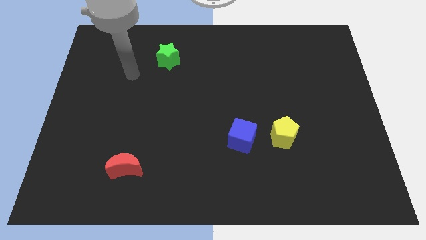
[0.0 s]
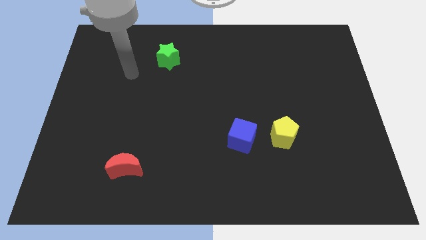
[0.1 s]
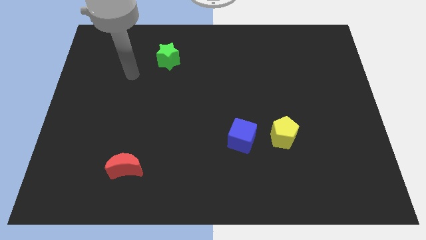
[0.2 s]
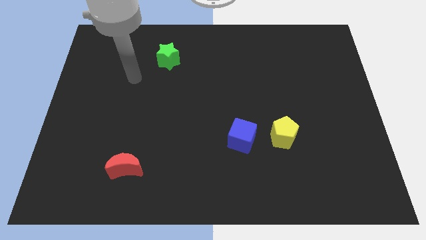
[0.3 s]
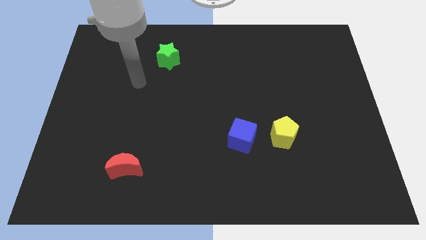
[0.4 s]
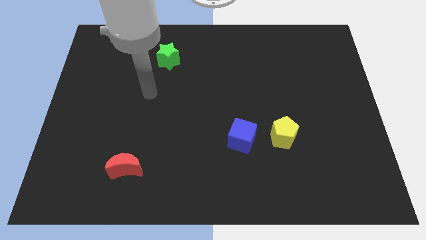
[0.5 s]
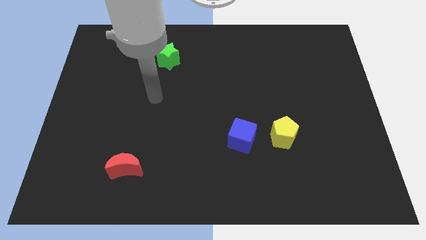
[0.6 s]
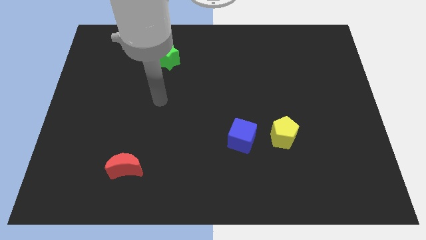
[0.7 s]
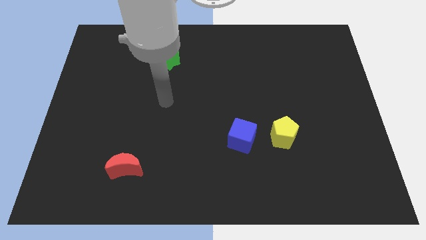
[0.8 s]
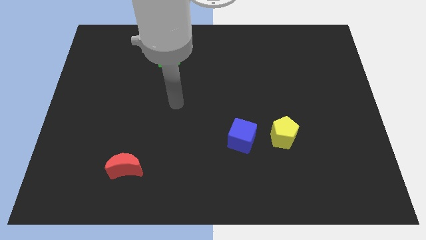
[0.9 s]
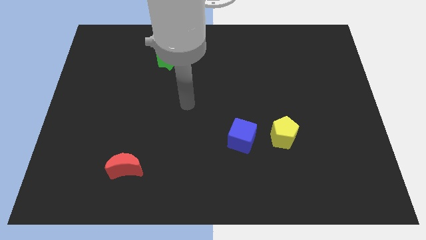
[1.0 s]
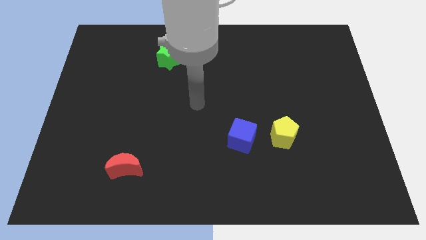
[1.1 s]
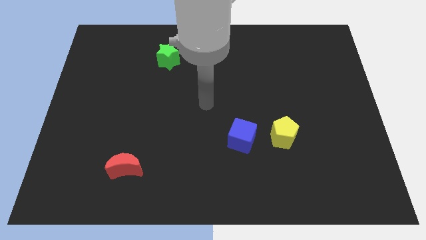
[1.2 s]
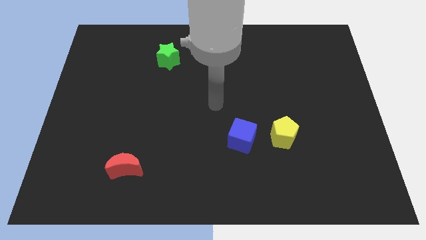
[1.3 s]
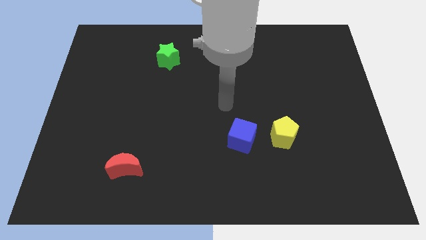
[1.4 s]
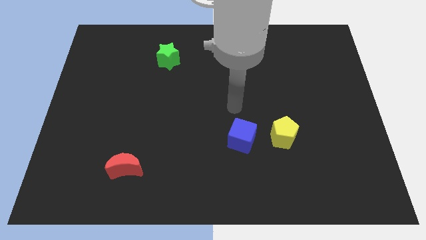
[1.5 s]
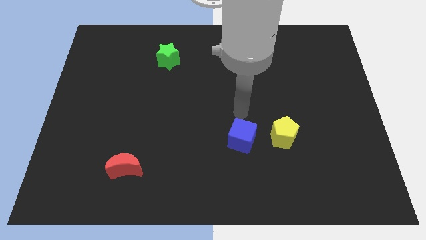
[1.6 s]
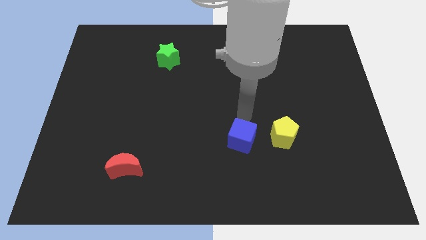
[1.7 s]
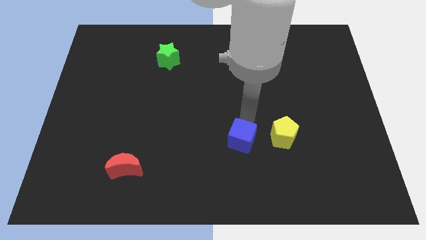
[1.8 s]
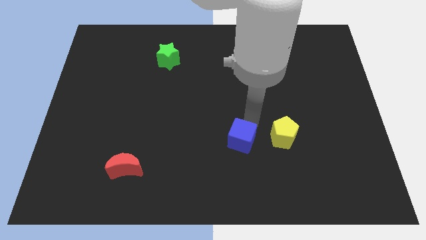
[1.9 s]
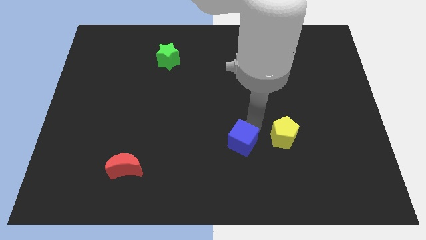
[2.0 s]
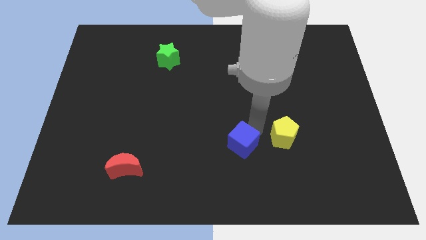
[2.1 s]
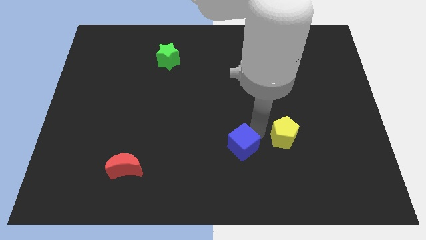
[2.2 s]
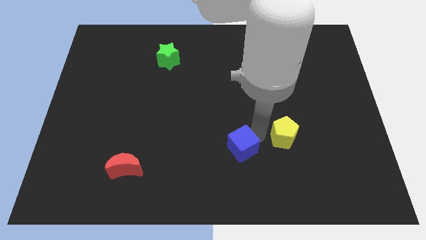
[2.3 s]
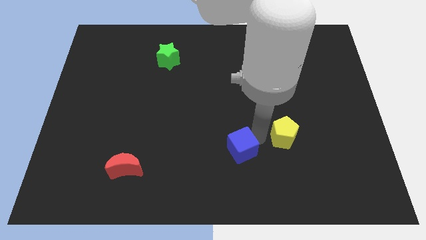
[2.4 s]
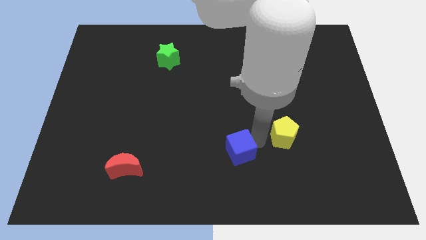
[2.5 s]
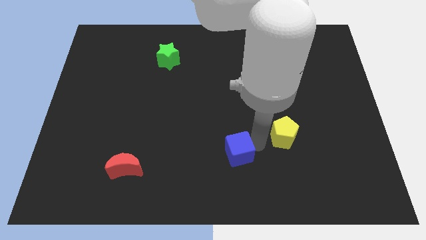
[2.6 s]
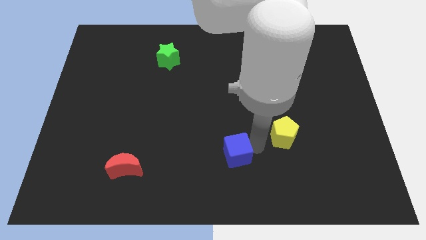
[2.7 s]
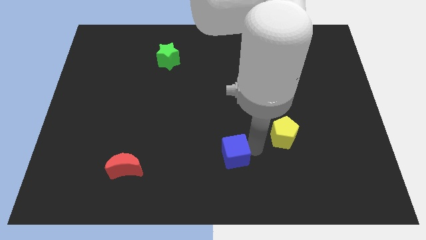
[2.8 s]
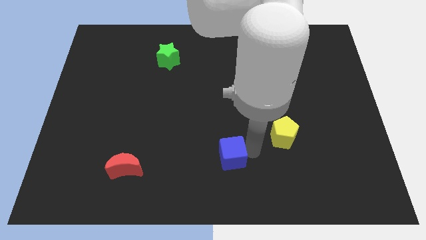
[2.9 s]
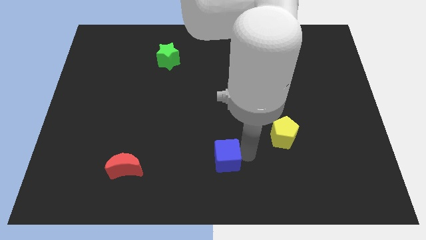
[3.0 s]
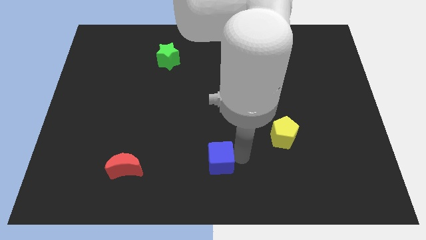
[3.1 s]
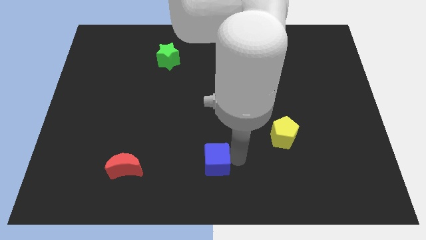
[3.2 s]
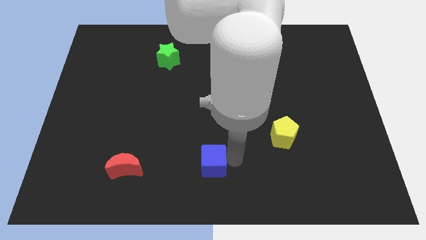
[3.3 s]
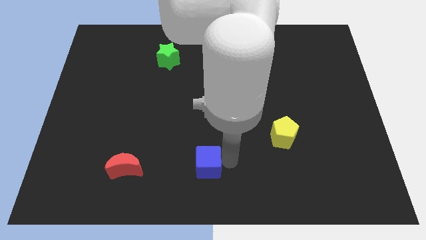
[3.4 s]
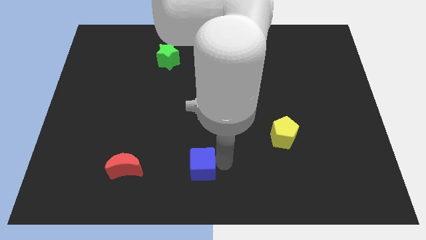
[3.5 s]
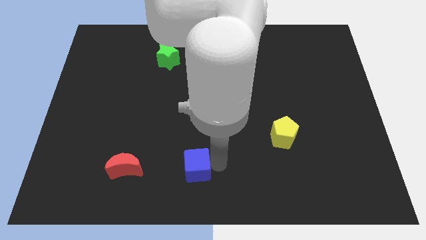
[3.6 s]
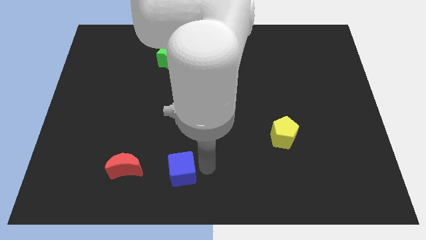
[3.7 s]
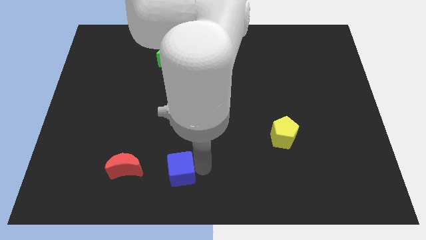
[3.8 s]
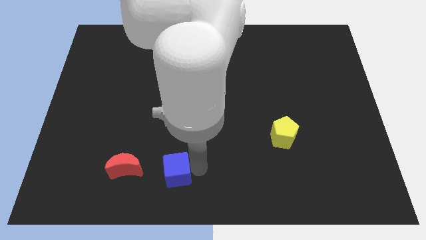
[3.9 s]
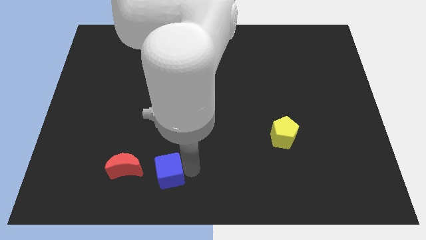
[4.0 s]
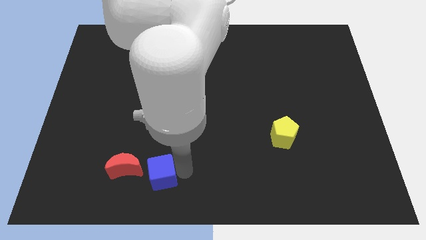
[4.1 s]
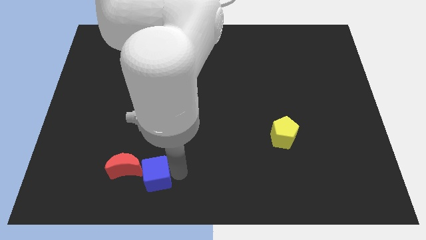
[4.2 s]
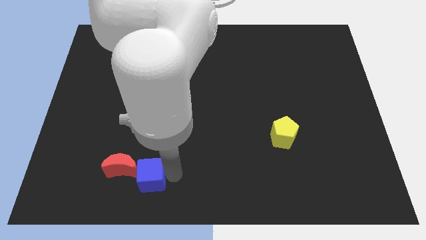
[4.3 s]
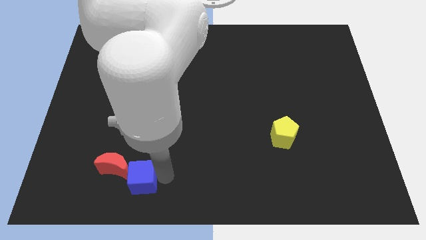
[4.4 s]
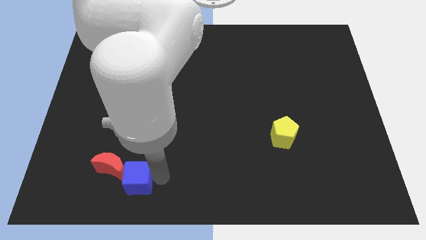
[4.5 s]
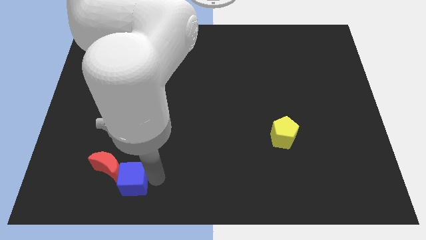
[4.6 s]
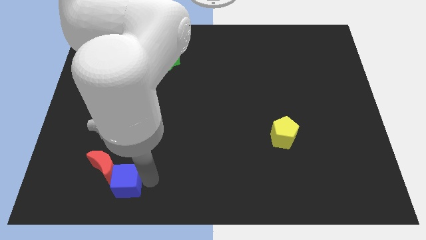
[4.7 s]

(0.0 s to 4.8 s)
move the blue block close to the moon

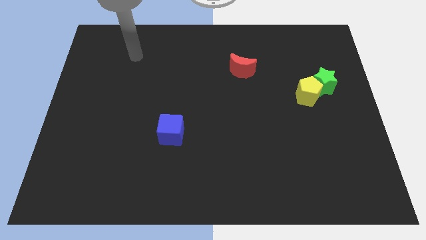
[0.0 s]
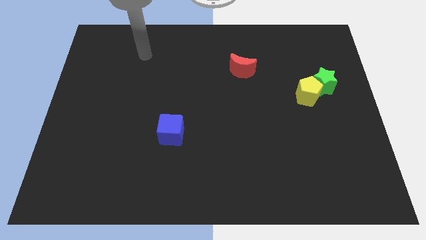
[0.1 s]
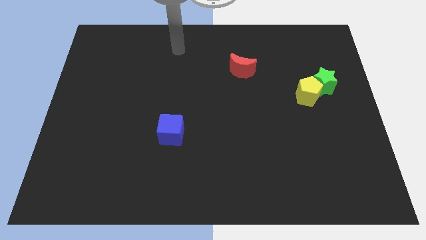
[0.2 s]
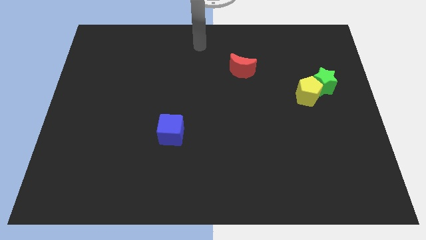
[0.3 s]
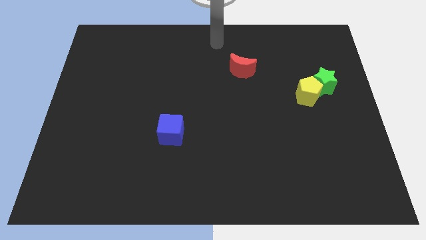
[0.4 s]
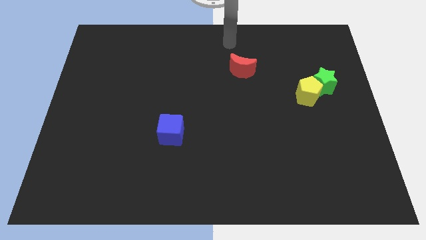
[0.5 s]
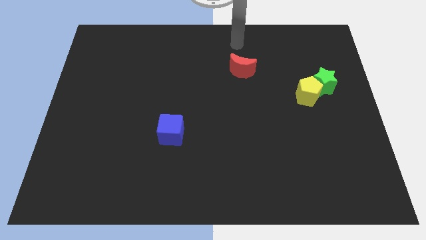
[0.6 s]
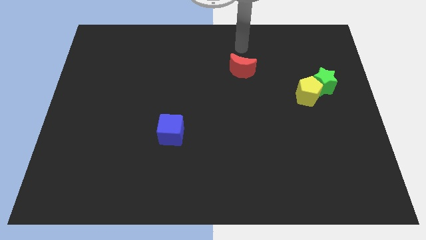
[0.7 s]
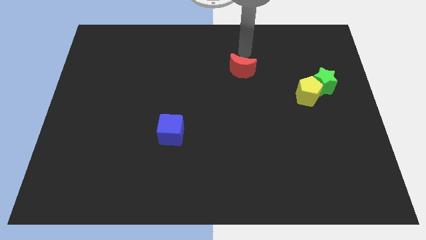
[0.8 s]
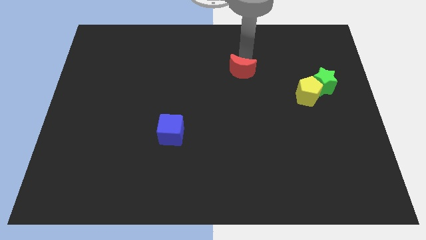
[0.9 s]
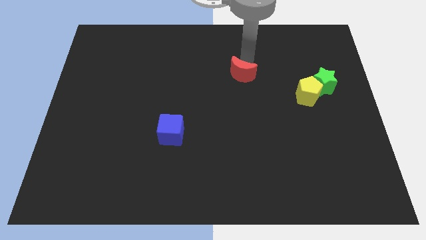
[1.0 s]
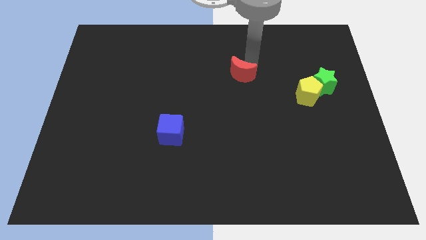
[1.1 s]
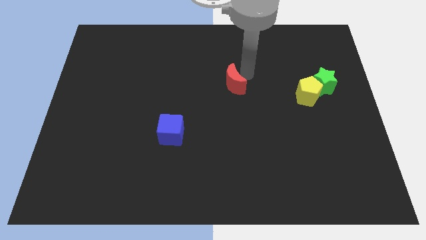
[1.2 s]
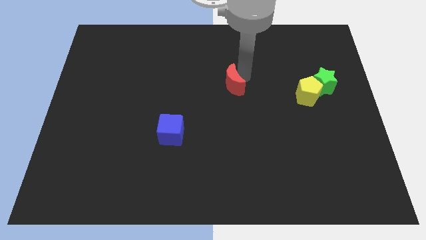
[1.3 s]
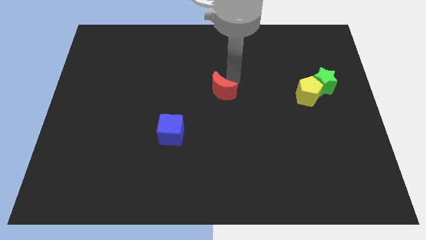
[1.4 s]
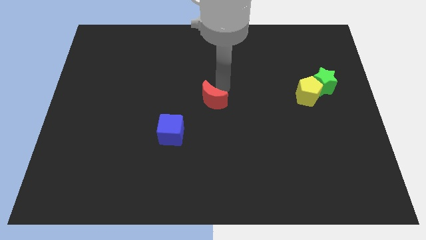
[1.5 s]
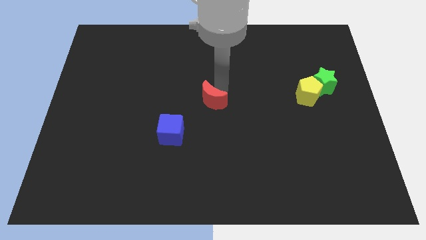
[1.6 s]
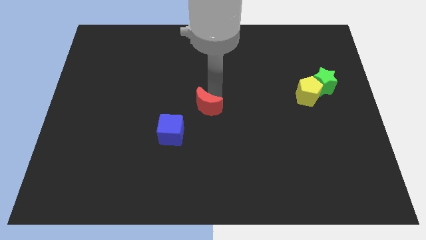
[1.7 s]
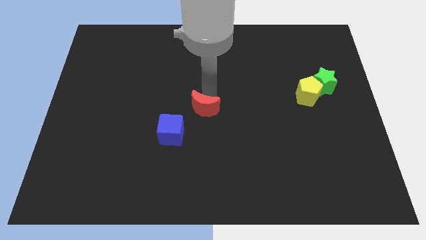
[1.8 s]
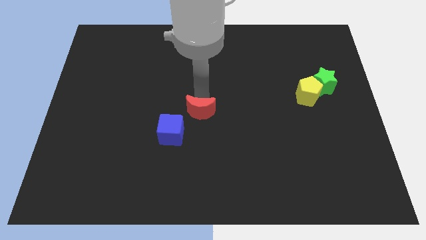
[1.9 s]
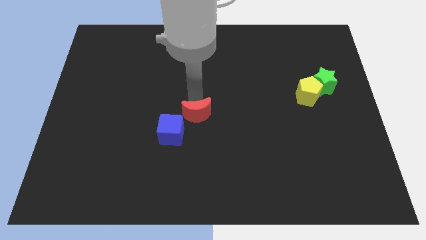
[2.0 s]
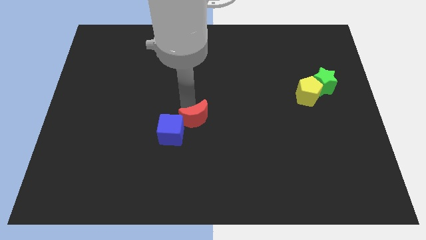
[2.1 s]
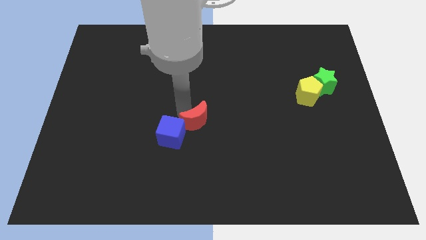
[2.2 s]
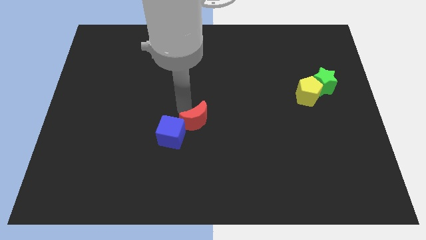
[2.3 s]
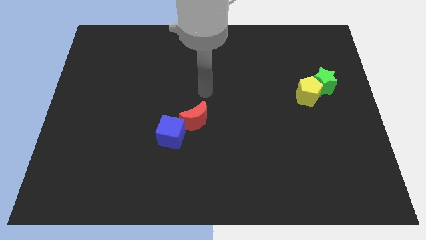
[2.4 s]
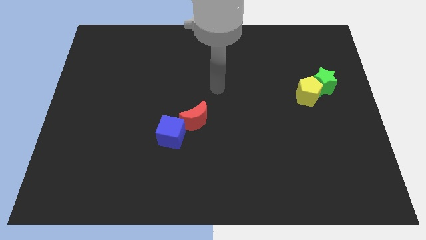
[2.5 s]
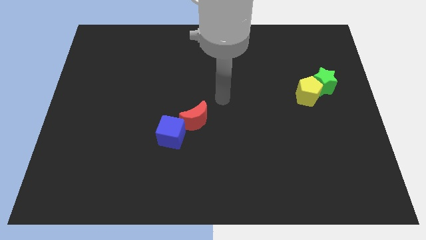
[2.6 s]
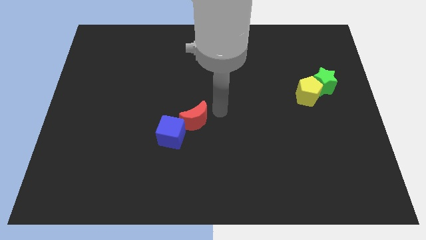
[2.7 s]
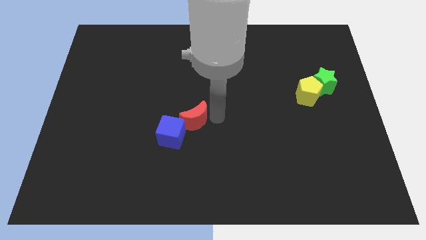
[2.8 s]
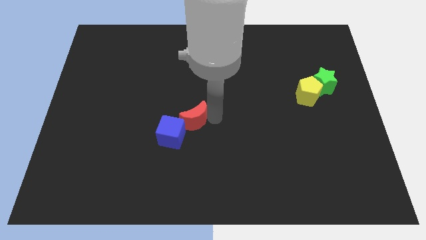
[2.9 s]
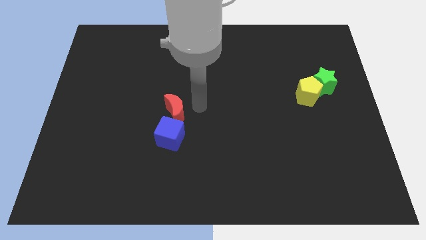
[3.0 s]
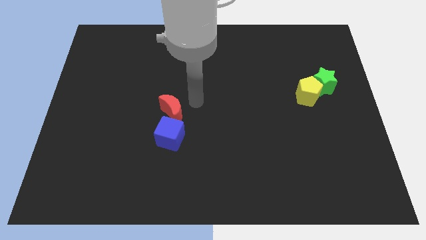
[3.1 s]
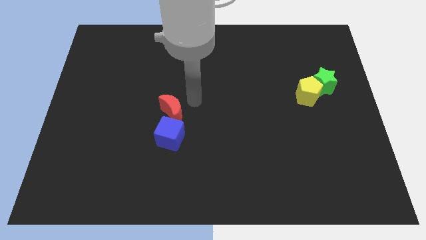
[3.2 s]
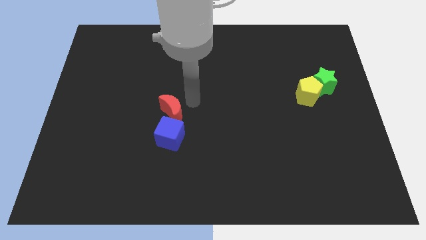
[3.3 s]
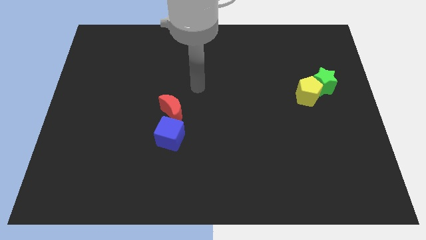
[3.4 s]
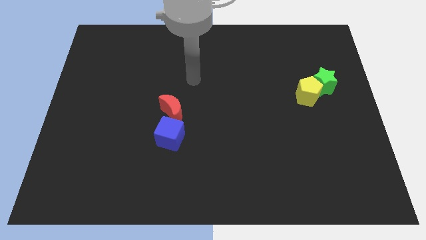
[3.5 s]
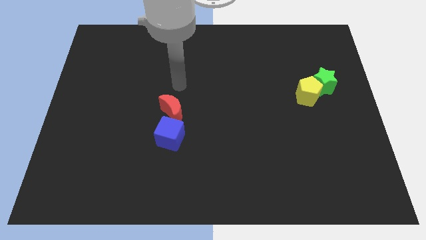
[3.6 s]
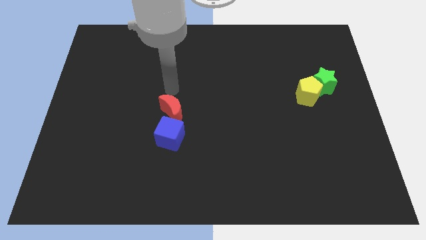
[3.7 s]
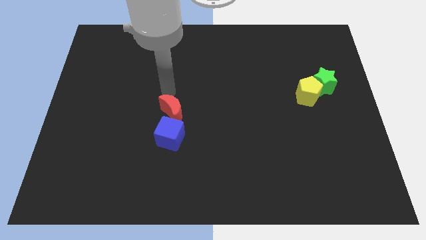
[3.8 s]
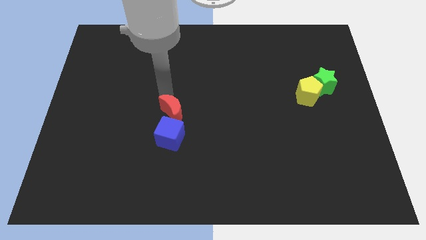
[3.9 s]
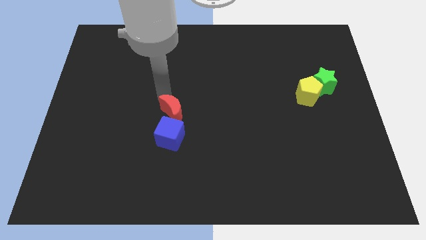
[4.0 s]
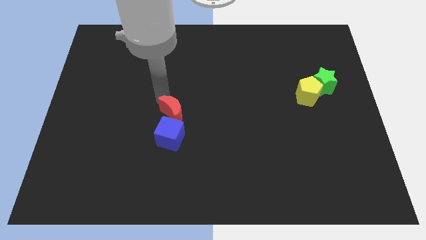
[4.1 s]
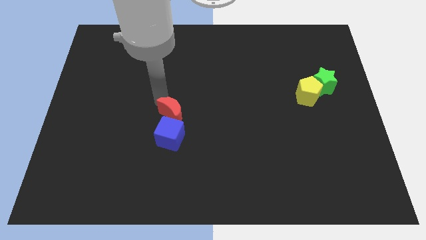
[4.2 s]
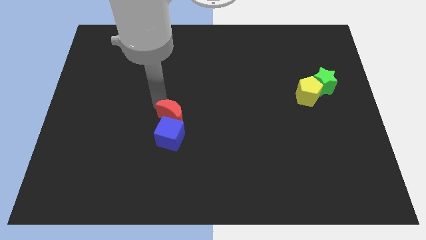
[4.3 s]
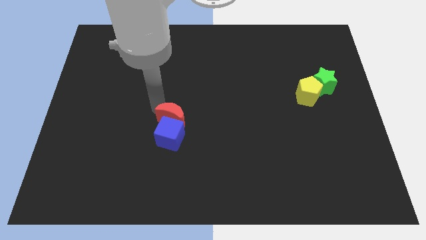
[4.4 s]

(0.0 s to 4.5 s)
push the moon to the cube
